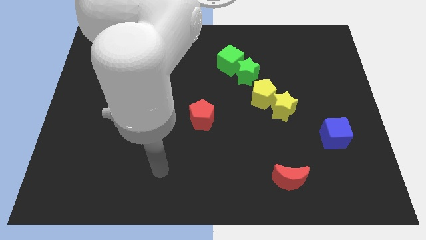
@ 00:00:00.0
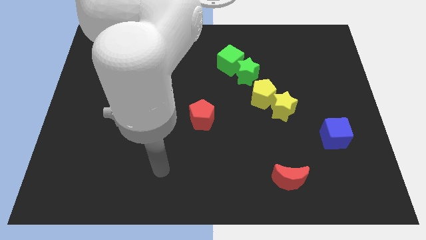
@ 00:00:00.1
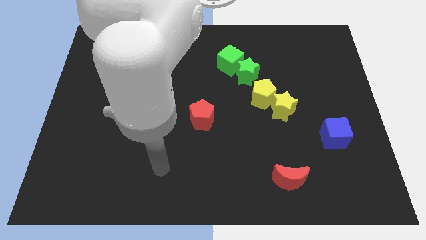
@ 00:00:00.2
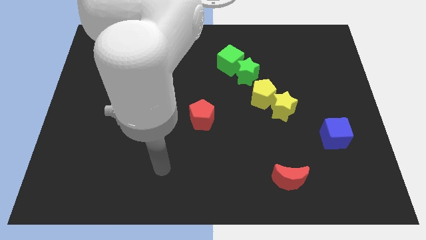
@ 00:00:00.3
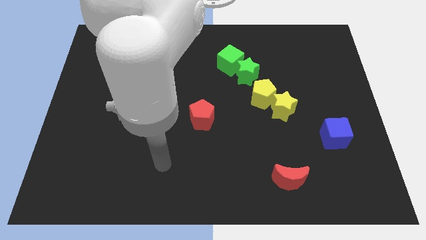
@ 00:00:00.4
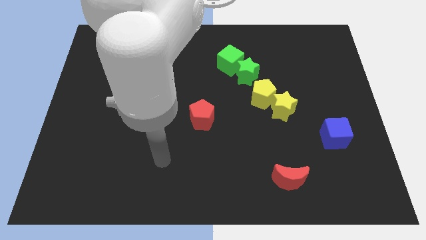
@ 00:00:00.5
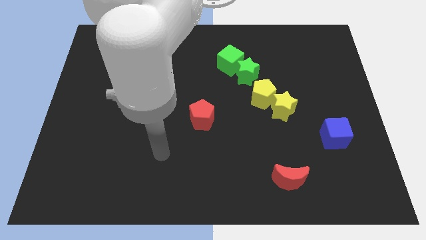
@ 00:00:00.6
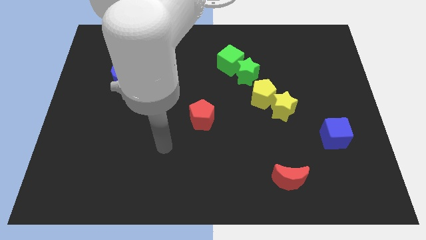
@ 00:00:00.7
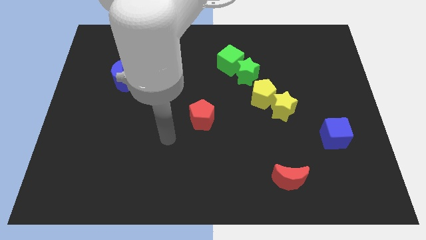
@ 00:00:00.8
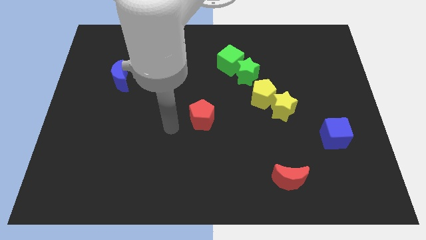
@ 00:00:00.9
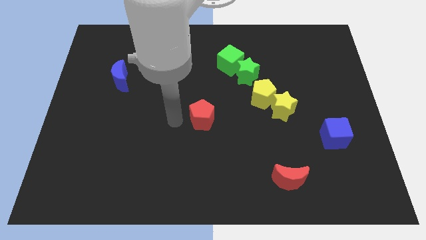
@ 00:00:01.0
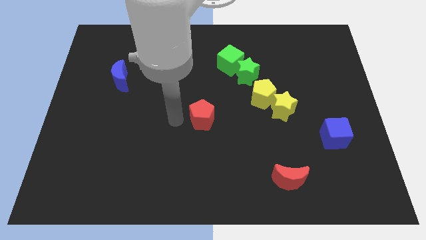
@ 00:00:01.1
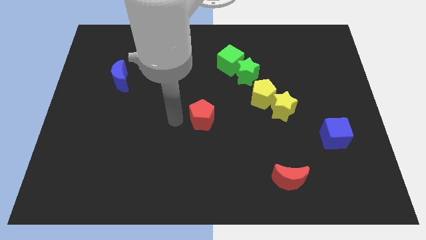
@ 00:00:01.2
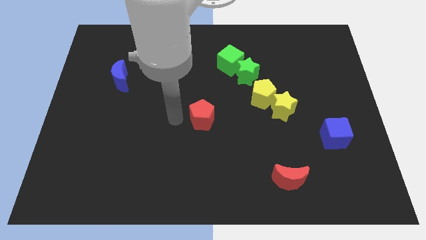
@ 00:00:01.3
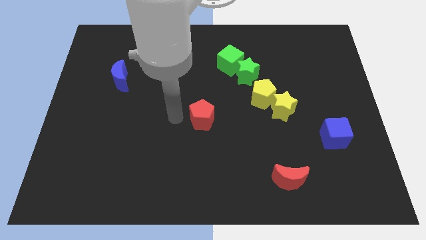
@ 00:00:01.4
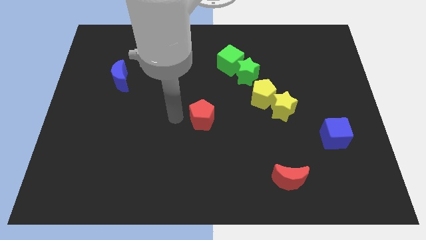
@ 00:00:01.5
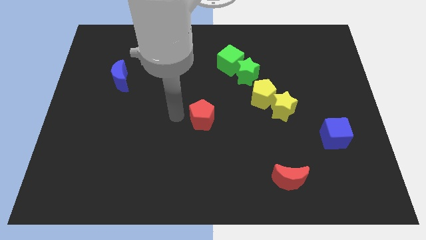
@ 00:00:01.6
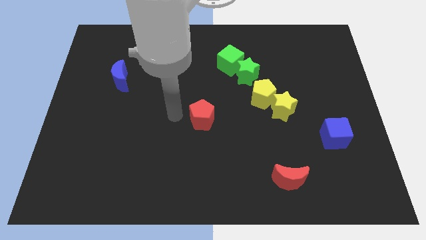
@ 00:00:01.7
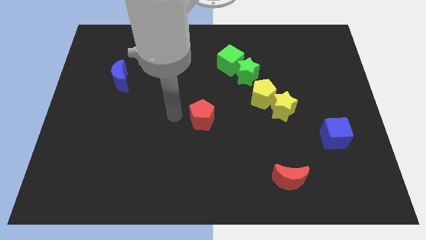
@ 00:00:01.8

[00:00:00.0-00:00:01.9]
move your arm towards the red pentagon

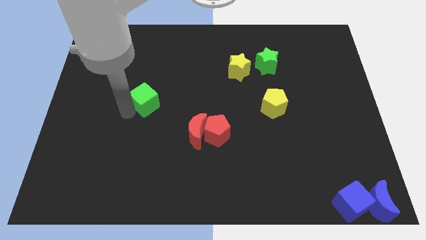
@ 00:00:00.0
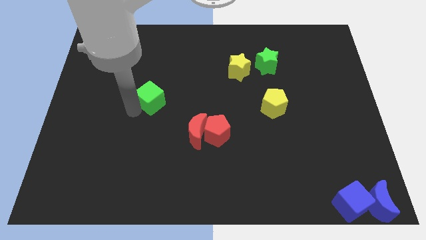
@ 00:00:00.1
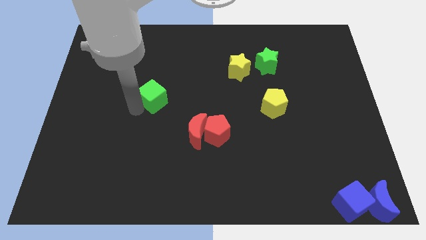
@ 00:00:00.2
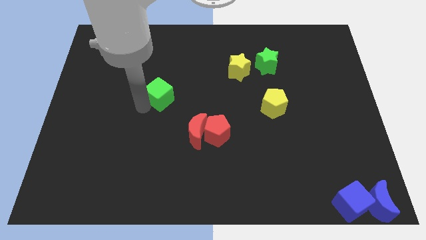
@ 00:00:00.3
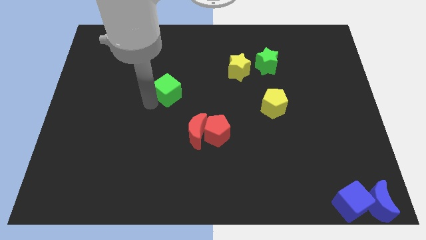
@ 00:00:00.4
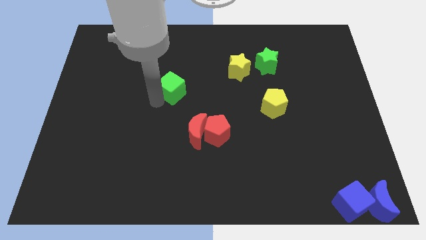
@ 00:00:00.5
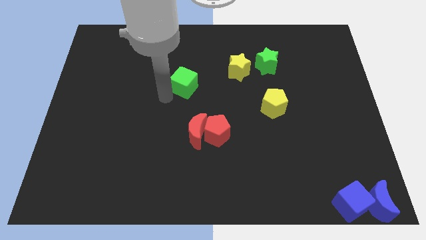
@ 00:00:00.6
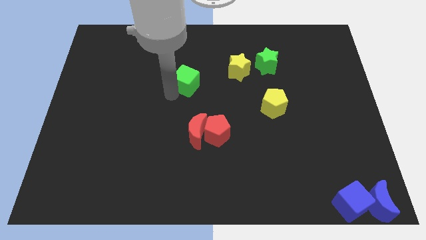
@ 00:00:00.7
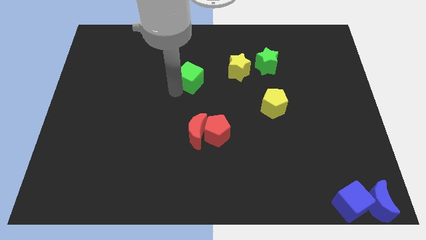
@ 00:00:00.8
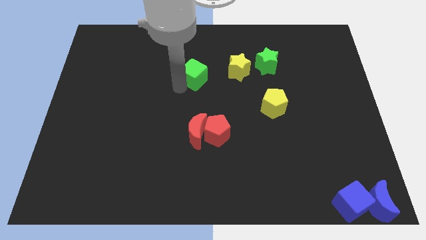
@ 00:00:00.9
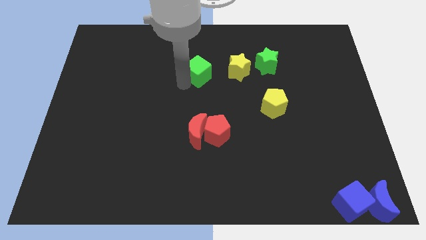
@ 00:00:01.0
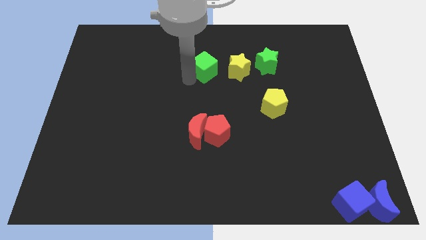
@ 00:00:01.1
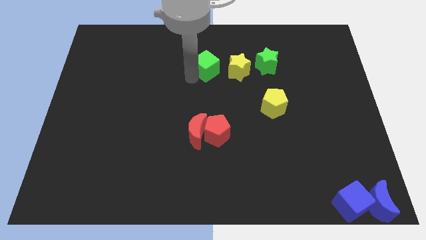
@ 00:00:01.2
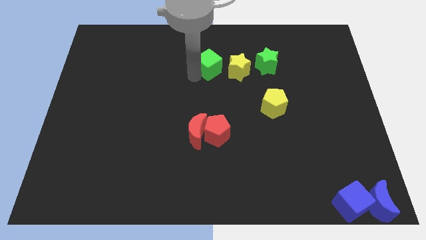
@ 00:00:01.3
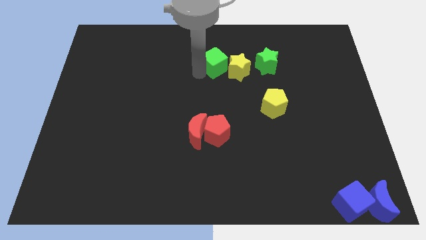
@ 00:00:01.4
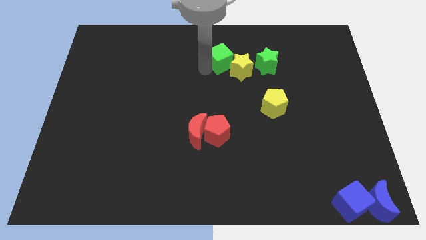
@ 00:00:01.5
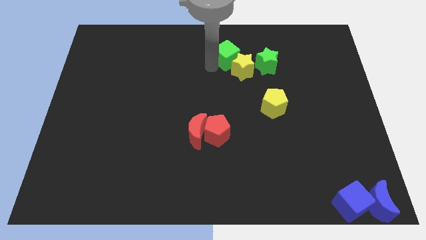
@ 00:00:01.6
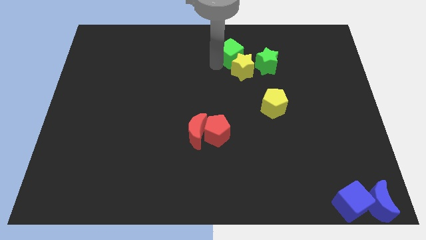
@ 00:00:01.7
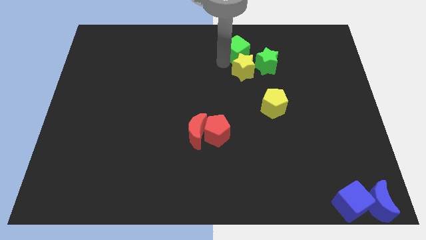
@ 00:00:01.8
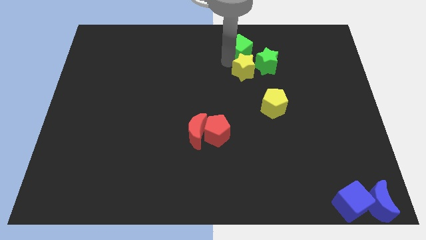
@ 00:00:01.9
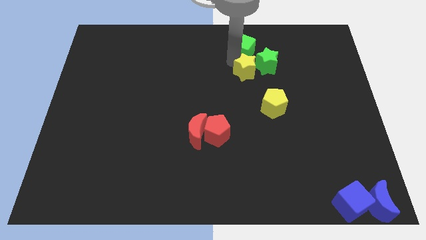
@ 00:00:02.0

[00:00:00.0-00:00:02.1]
place the green cube above the yellow star

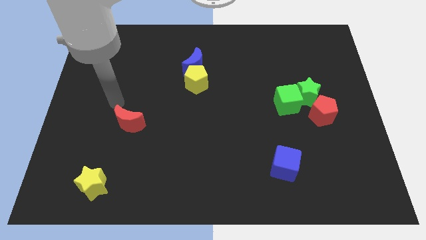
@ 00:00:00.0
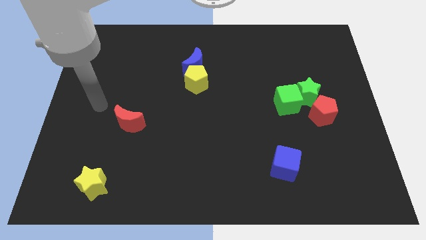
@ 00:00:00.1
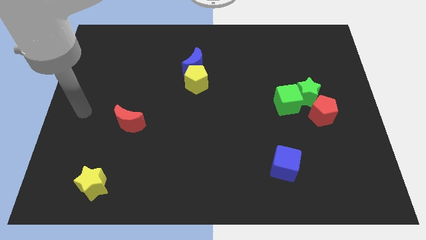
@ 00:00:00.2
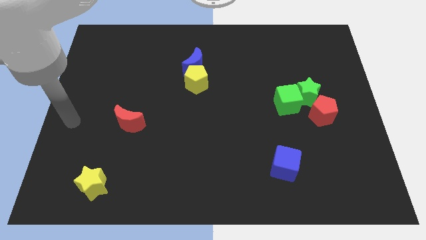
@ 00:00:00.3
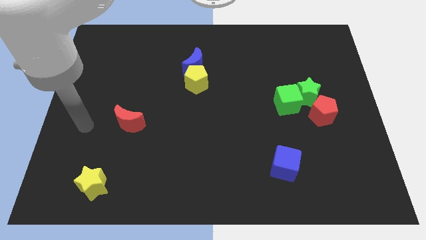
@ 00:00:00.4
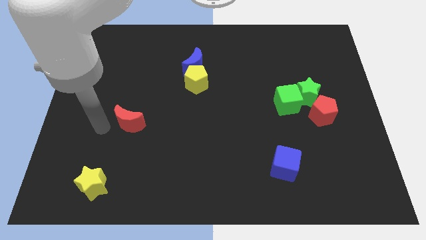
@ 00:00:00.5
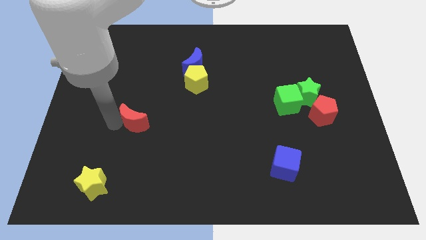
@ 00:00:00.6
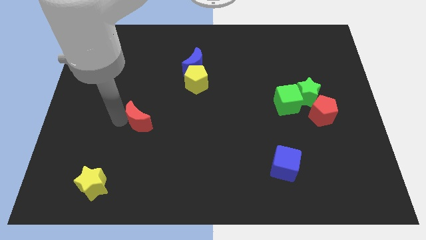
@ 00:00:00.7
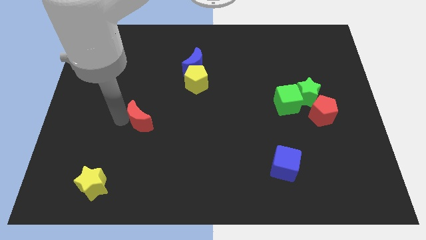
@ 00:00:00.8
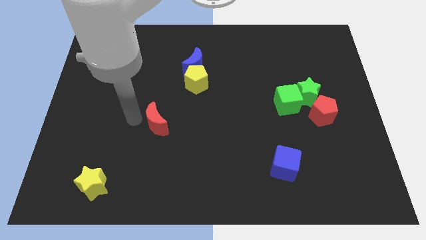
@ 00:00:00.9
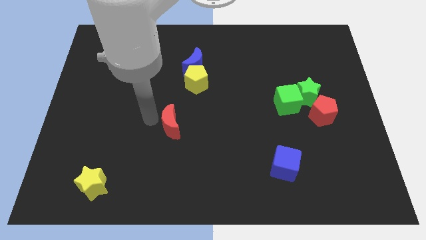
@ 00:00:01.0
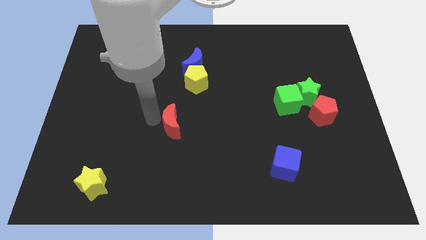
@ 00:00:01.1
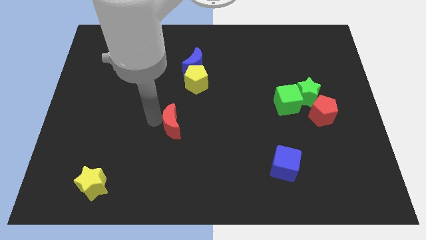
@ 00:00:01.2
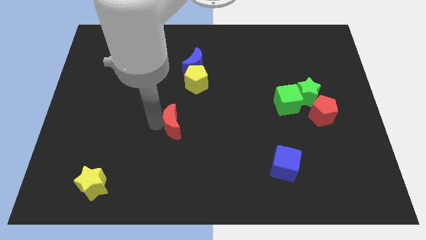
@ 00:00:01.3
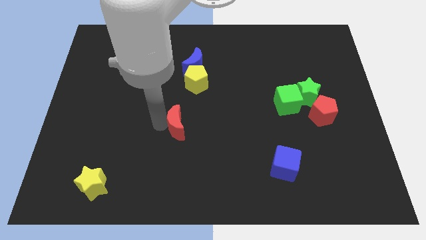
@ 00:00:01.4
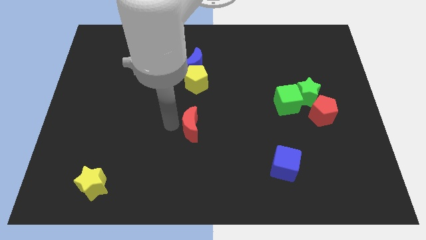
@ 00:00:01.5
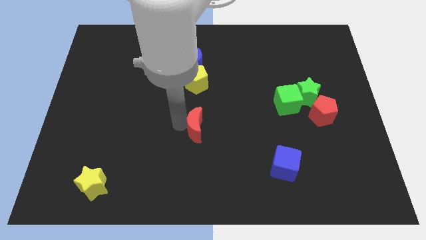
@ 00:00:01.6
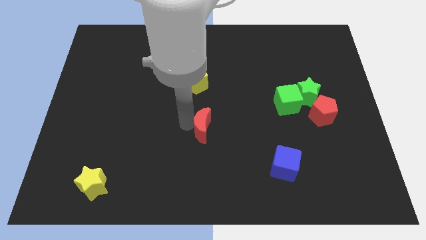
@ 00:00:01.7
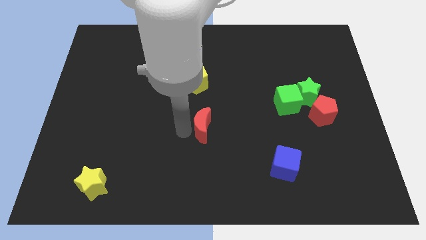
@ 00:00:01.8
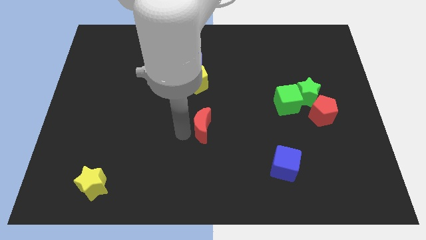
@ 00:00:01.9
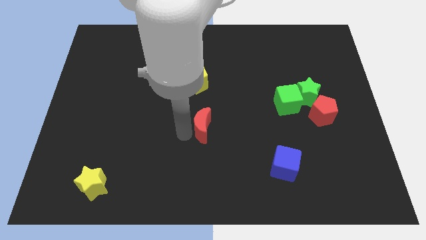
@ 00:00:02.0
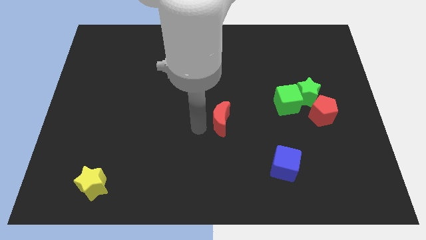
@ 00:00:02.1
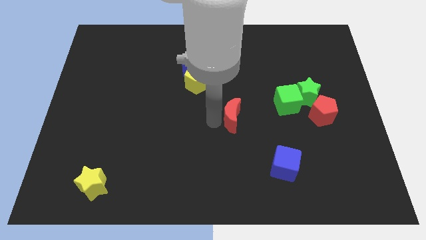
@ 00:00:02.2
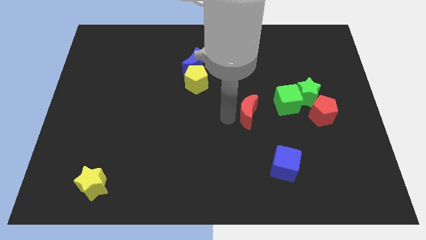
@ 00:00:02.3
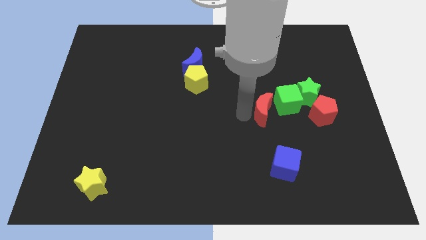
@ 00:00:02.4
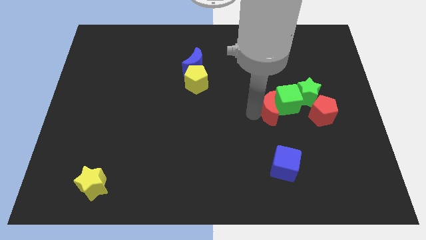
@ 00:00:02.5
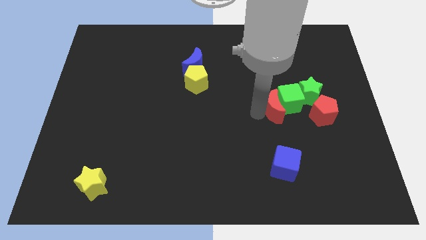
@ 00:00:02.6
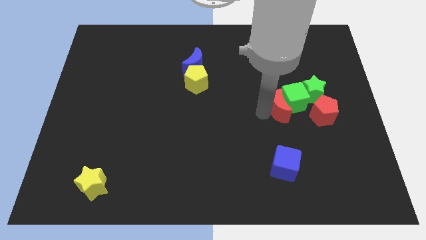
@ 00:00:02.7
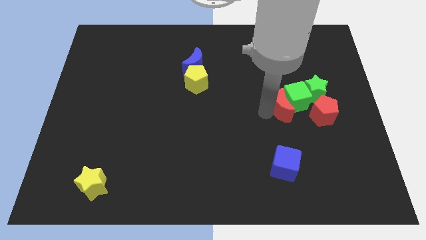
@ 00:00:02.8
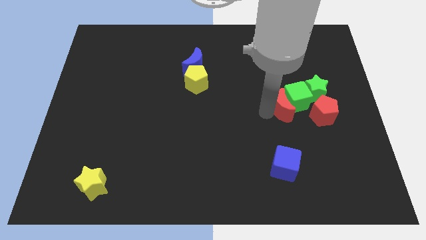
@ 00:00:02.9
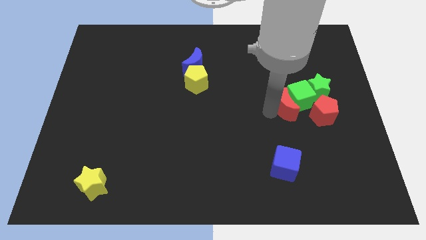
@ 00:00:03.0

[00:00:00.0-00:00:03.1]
push the red moon into the green cube

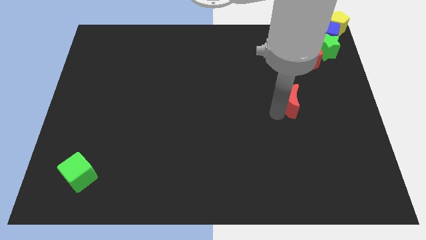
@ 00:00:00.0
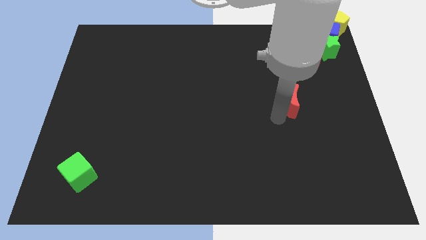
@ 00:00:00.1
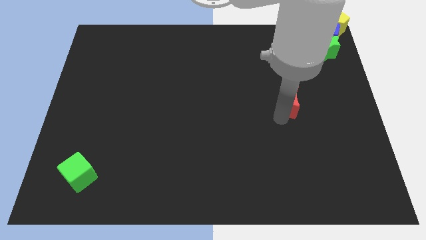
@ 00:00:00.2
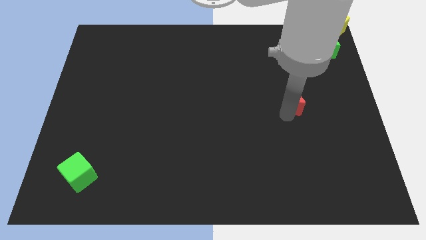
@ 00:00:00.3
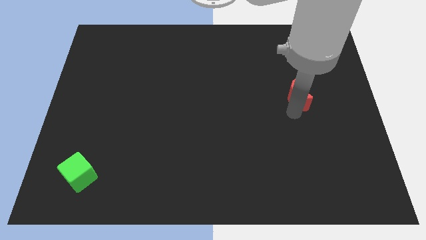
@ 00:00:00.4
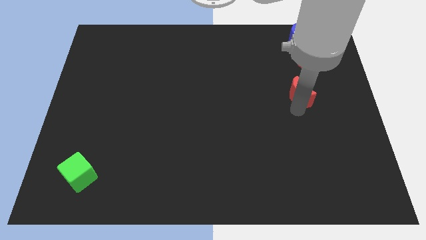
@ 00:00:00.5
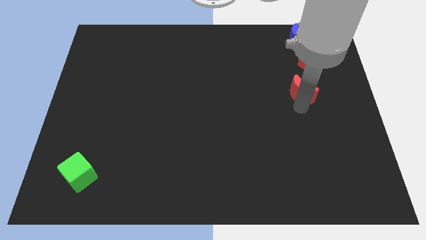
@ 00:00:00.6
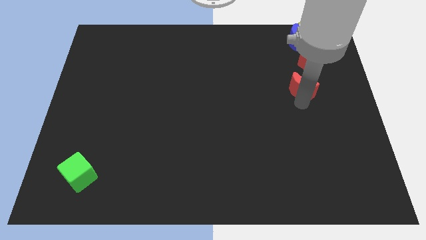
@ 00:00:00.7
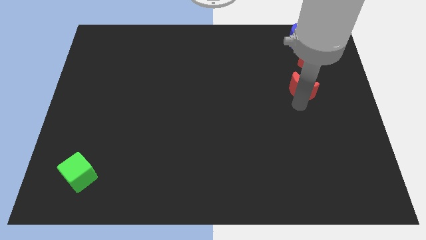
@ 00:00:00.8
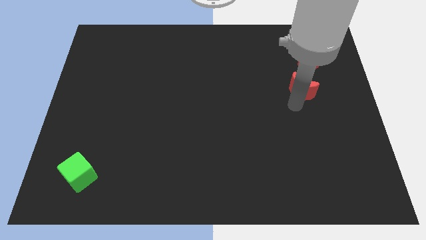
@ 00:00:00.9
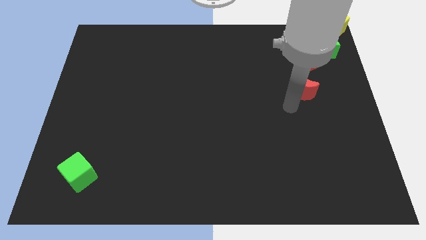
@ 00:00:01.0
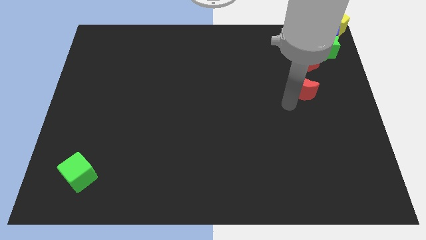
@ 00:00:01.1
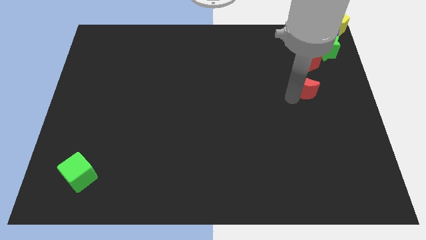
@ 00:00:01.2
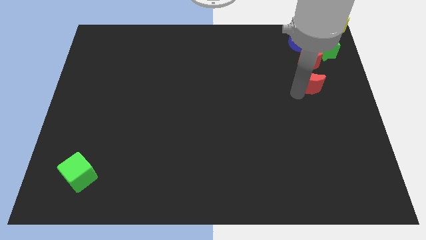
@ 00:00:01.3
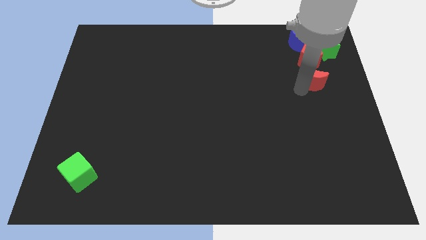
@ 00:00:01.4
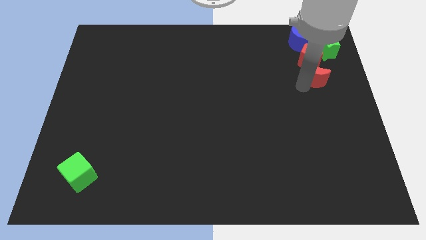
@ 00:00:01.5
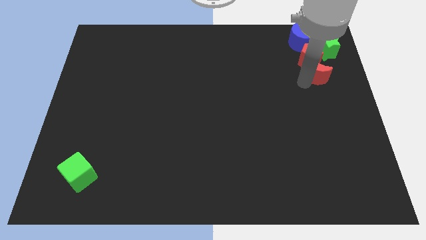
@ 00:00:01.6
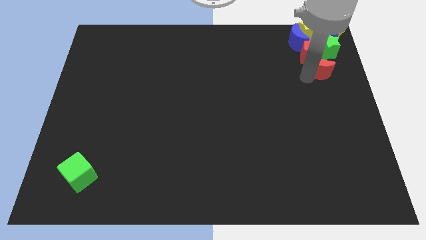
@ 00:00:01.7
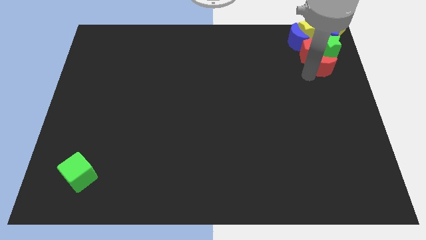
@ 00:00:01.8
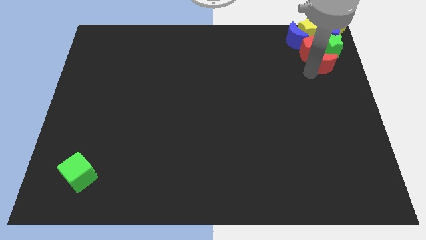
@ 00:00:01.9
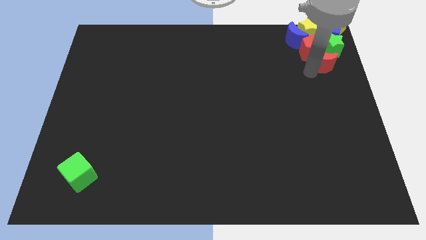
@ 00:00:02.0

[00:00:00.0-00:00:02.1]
push the red moon into the red pentagon
